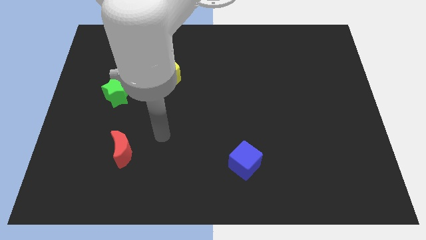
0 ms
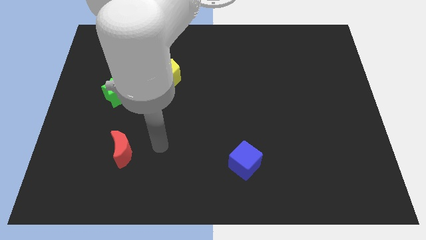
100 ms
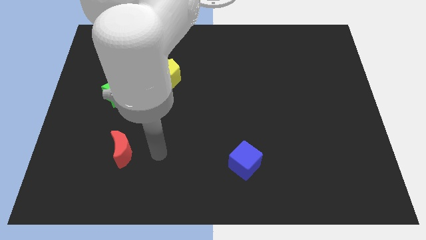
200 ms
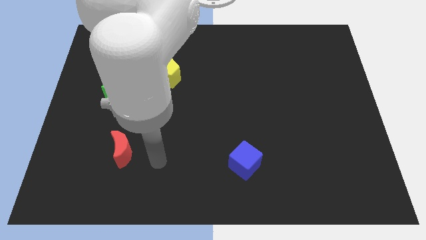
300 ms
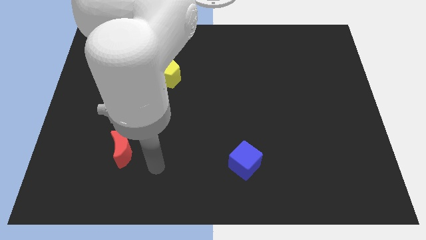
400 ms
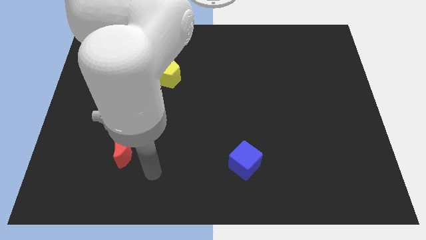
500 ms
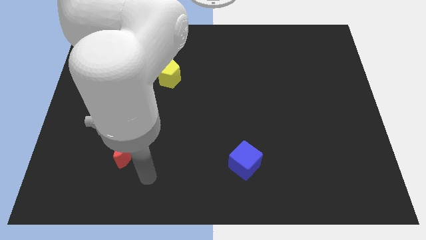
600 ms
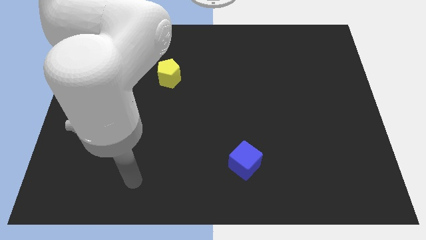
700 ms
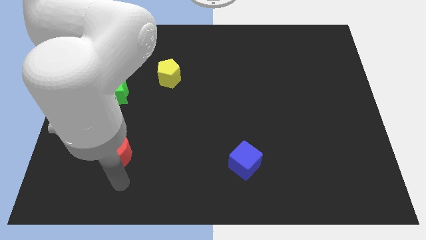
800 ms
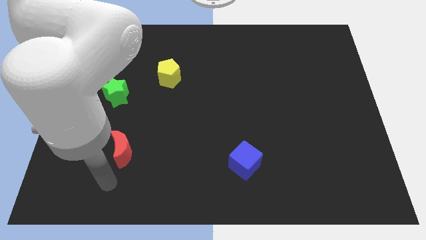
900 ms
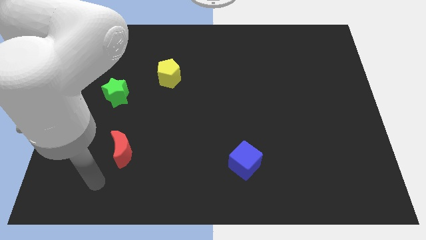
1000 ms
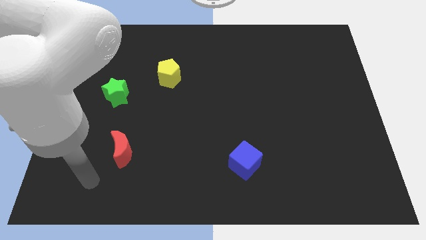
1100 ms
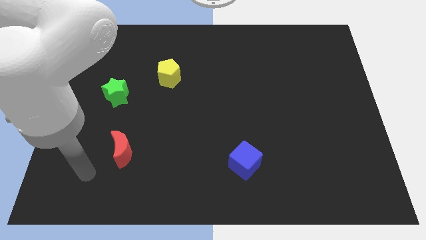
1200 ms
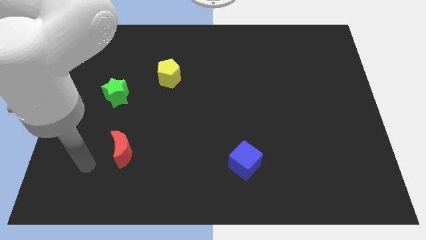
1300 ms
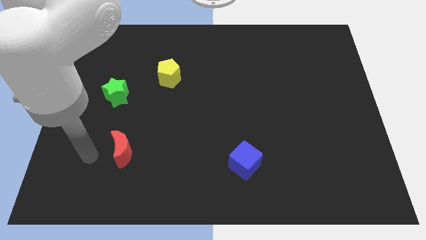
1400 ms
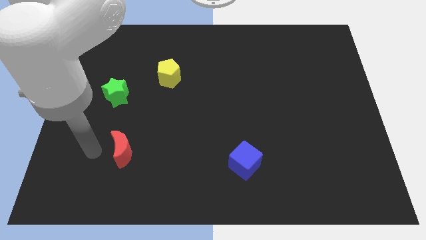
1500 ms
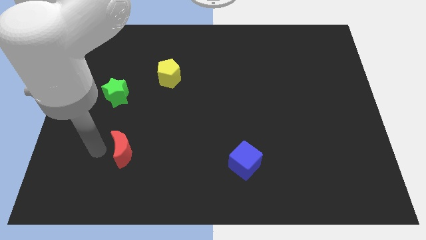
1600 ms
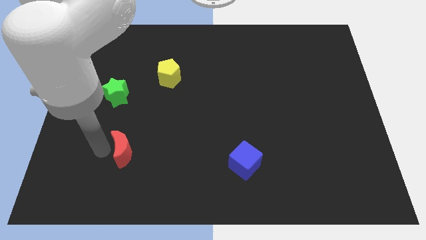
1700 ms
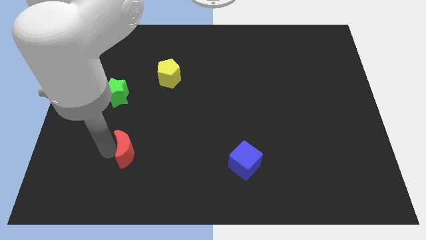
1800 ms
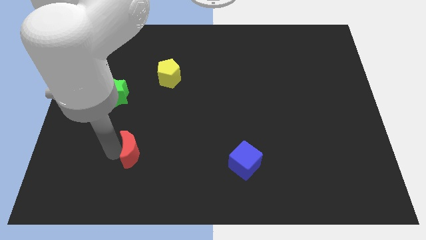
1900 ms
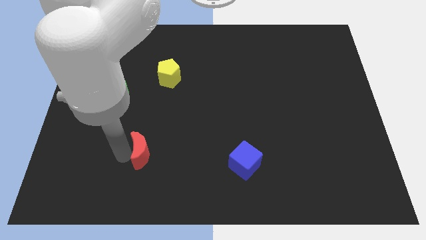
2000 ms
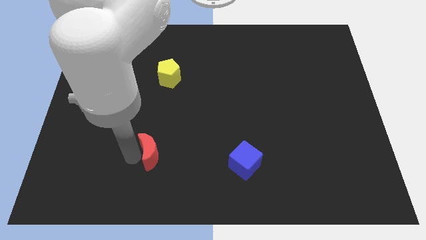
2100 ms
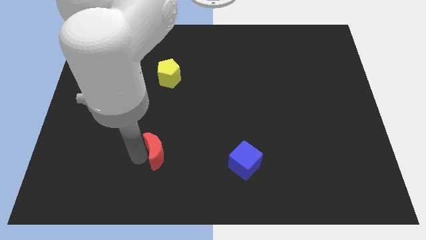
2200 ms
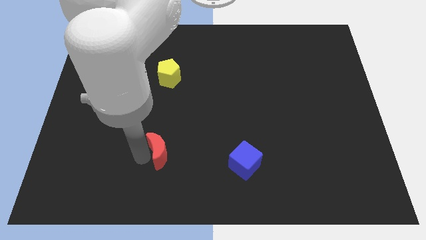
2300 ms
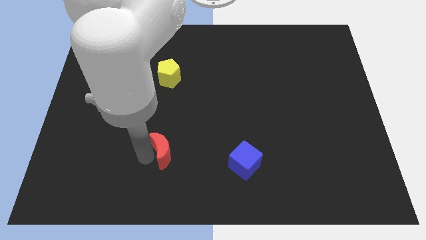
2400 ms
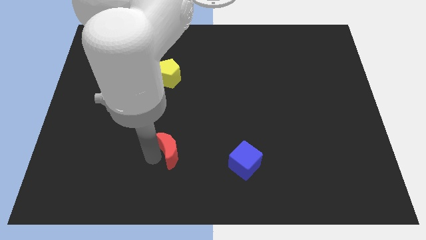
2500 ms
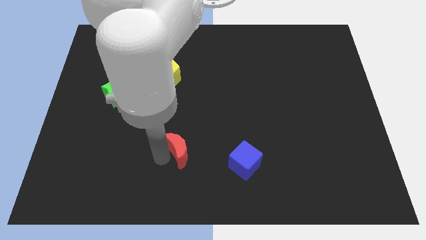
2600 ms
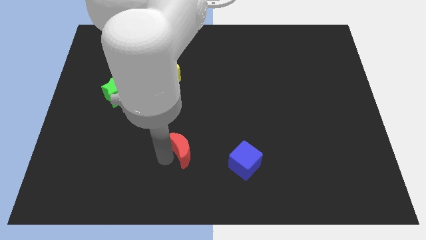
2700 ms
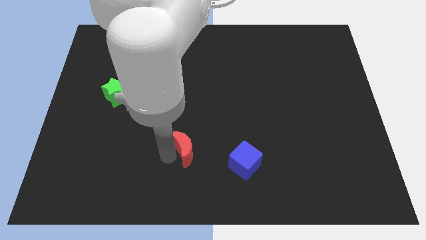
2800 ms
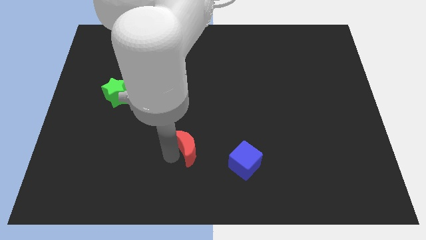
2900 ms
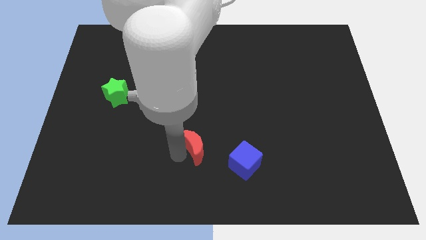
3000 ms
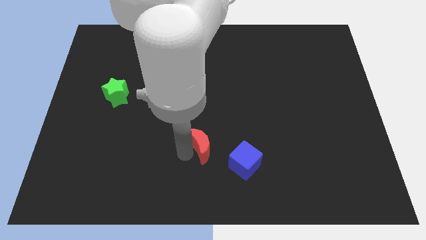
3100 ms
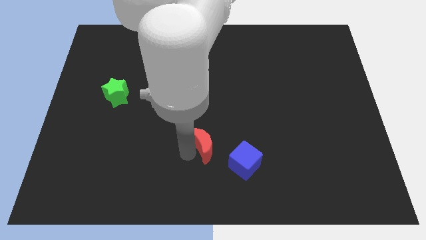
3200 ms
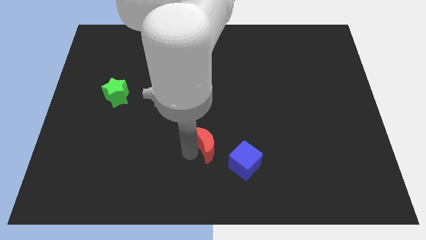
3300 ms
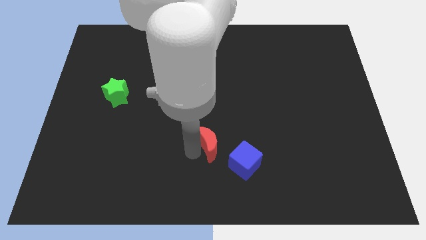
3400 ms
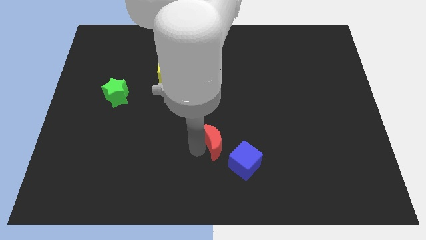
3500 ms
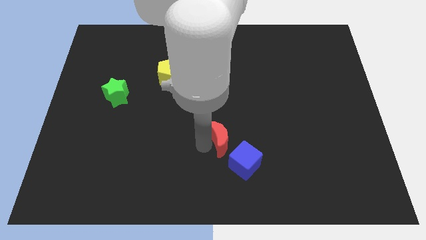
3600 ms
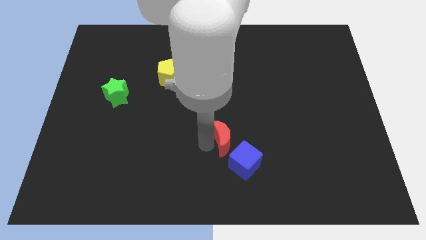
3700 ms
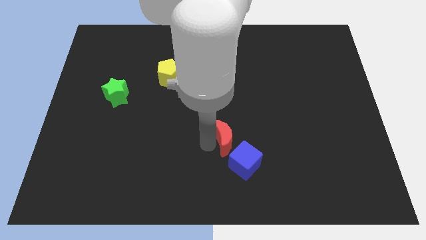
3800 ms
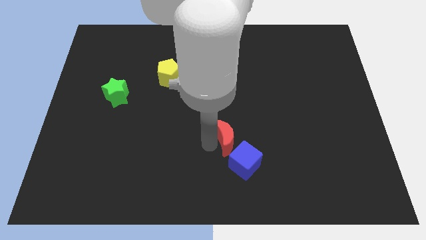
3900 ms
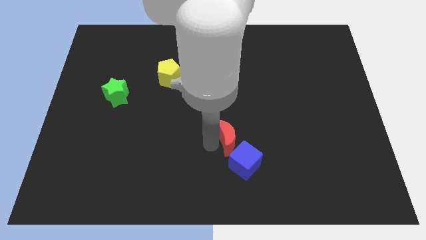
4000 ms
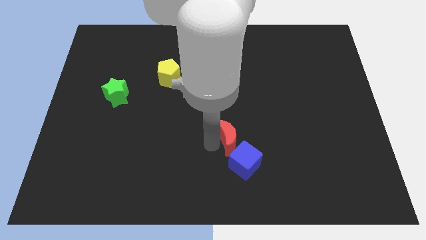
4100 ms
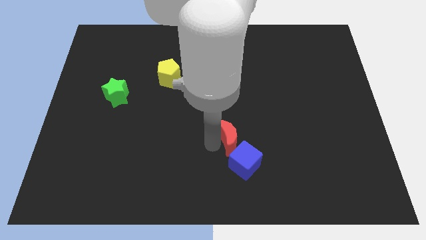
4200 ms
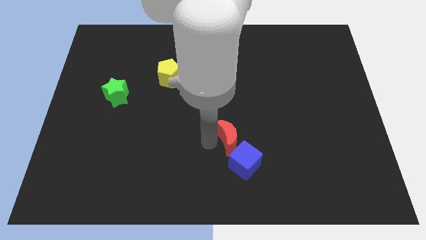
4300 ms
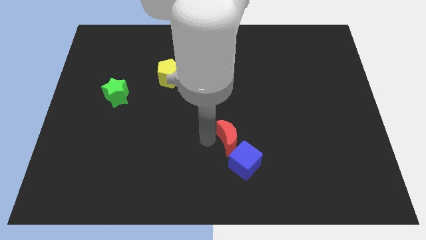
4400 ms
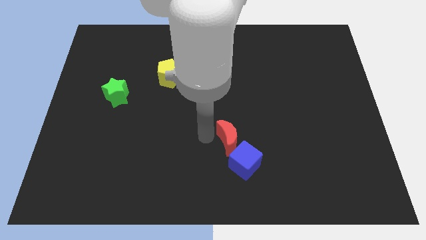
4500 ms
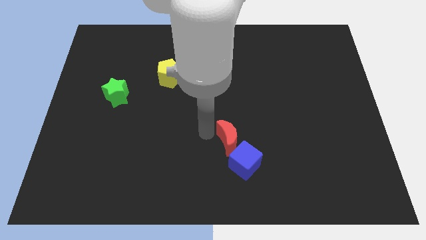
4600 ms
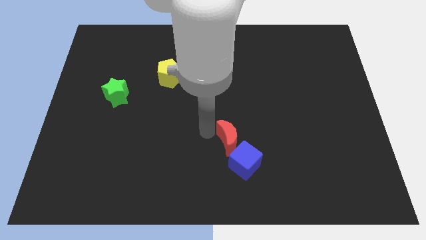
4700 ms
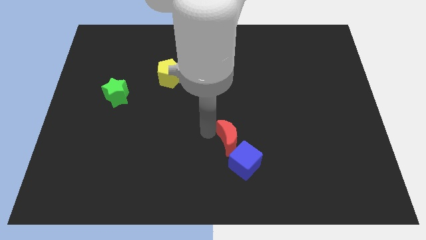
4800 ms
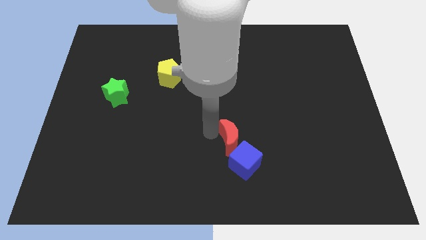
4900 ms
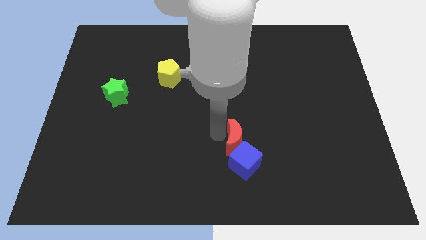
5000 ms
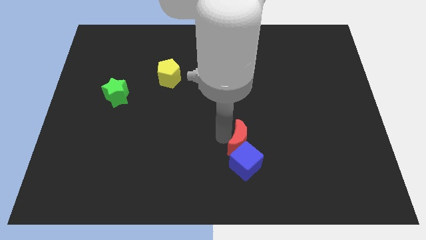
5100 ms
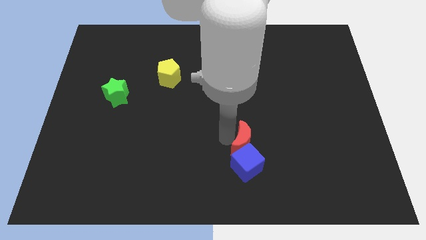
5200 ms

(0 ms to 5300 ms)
slide the red block next to the blue block

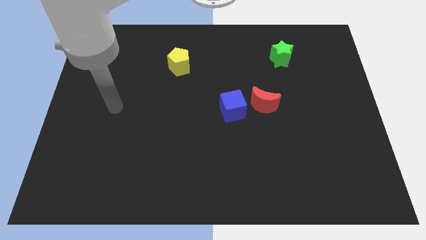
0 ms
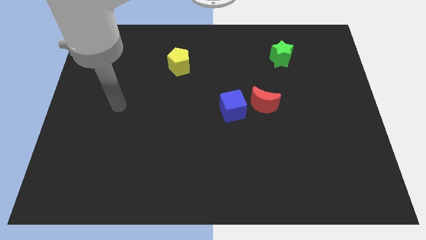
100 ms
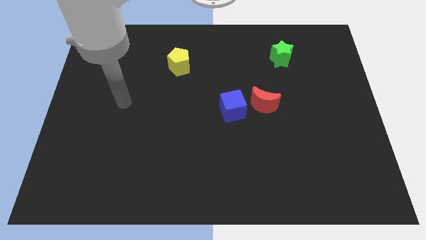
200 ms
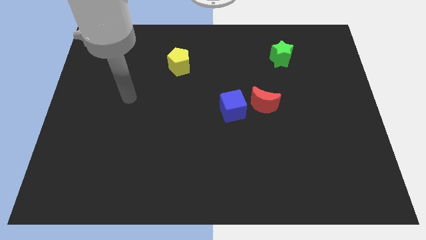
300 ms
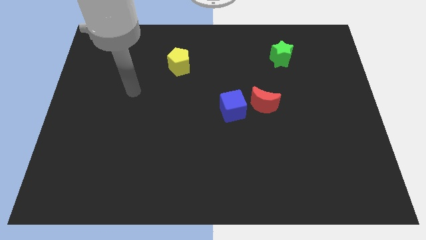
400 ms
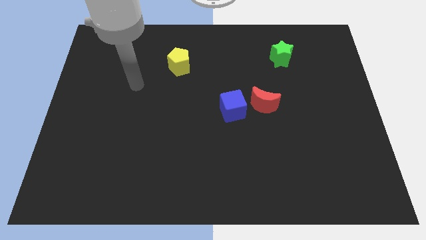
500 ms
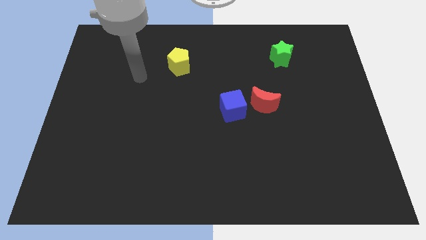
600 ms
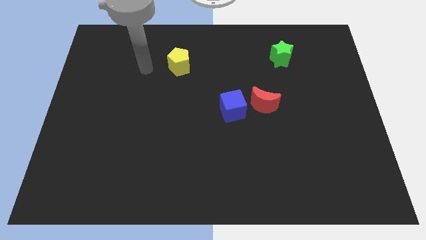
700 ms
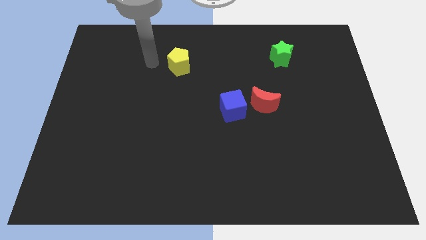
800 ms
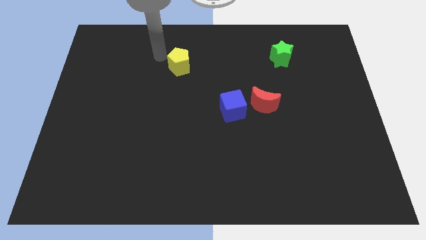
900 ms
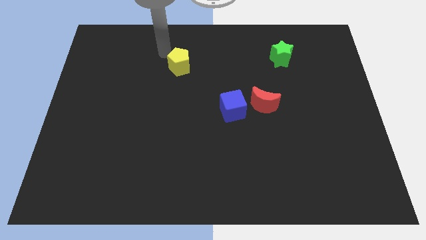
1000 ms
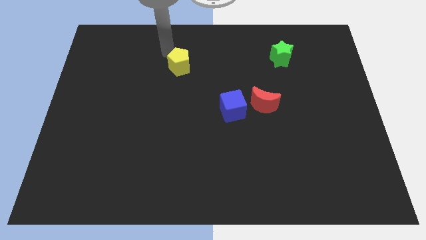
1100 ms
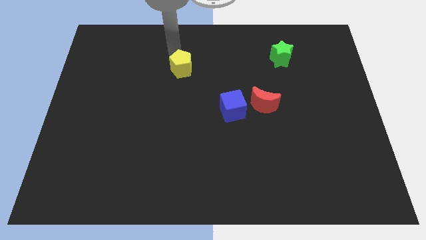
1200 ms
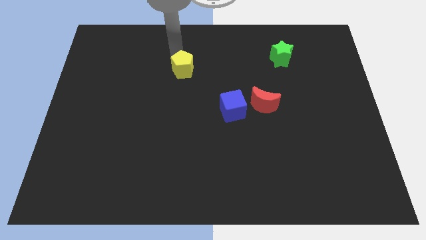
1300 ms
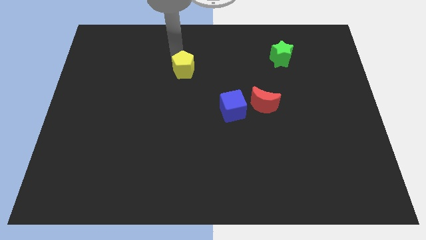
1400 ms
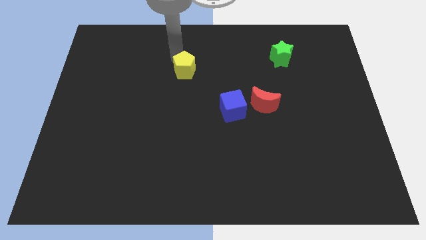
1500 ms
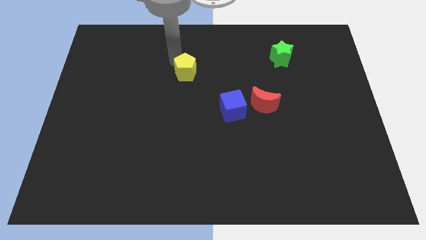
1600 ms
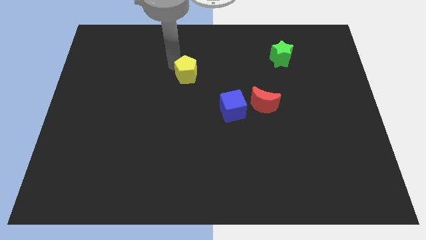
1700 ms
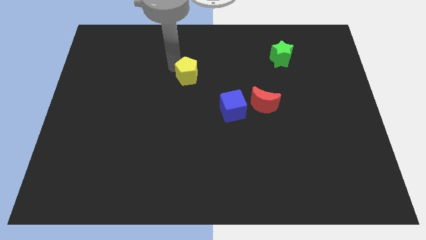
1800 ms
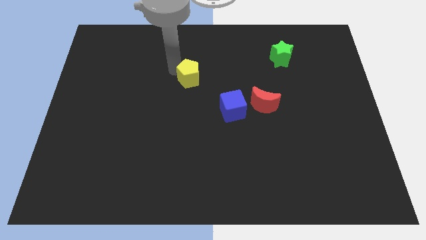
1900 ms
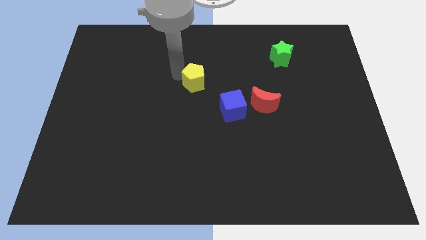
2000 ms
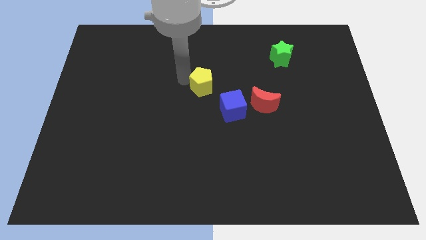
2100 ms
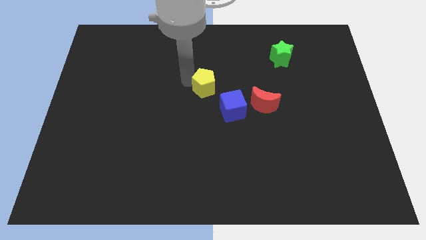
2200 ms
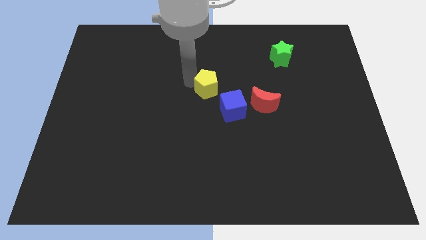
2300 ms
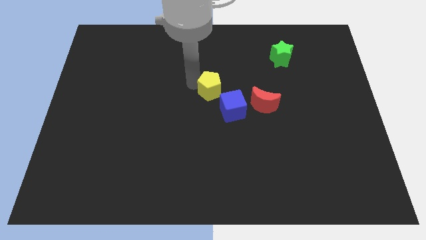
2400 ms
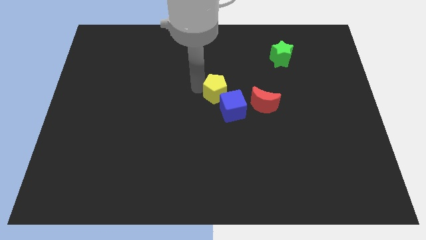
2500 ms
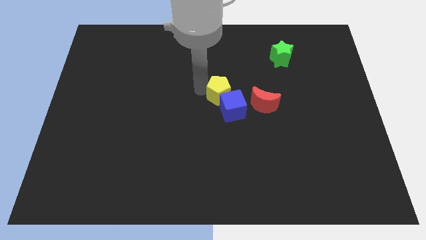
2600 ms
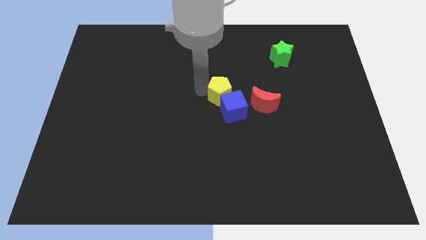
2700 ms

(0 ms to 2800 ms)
move the yellow pentagon next to the blue cube

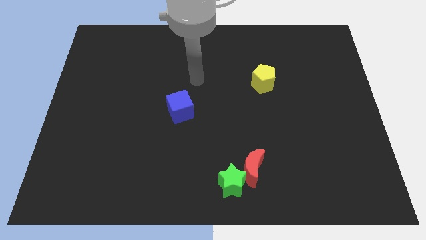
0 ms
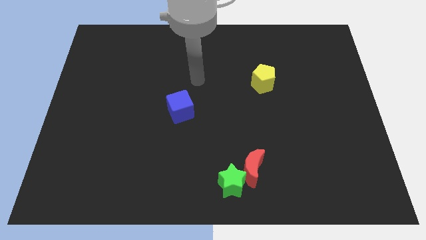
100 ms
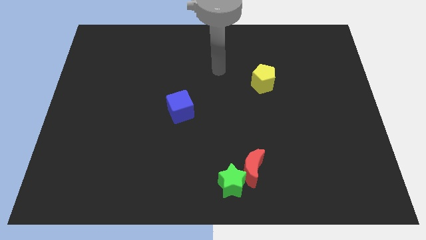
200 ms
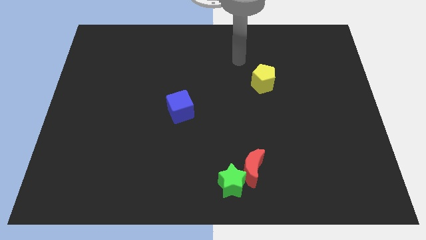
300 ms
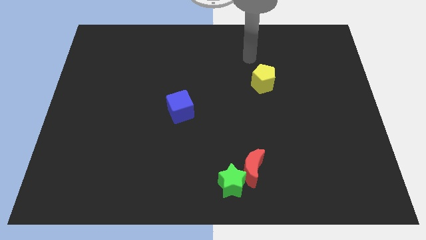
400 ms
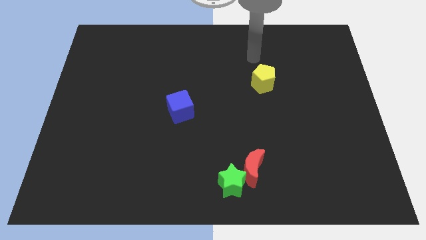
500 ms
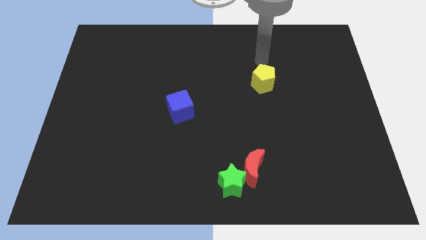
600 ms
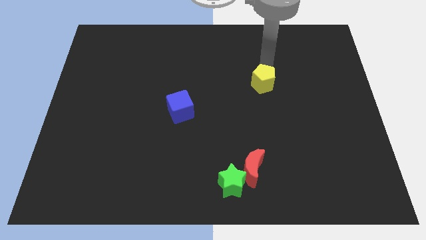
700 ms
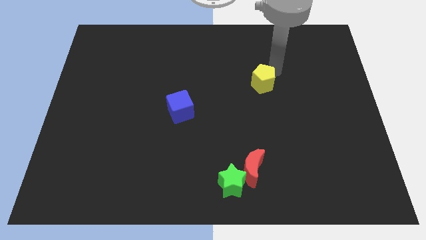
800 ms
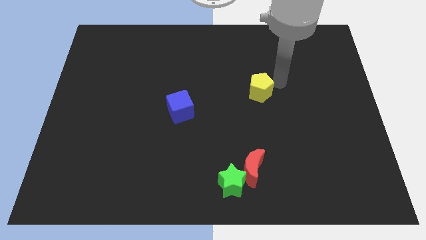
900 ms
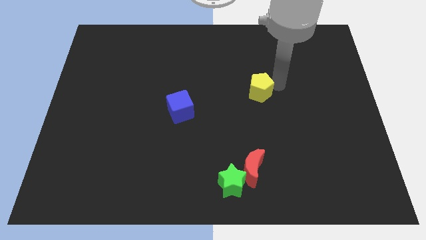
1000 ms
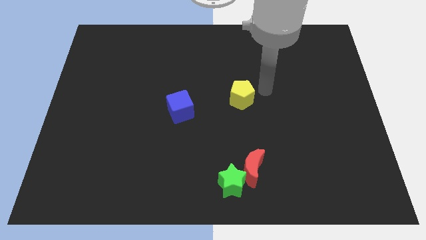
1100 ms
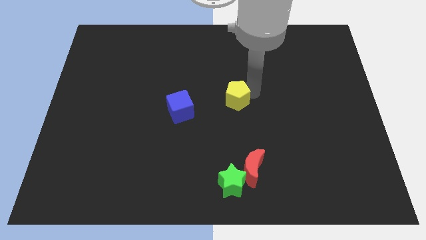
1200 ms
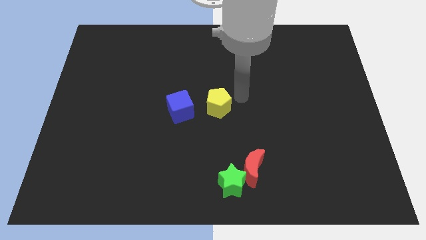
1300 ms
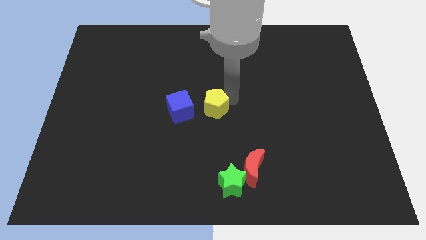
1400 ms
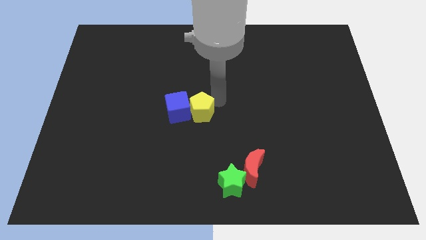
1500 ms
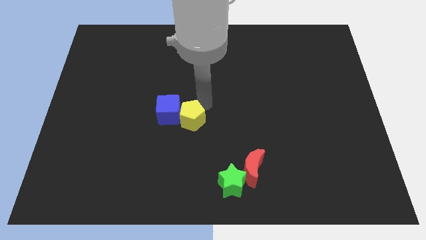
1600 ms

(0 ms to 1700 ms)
slide the yellow pentagon to the blue block
